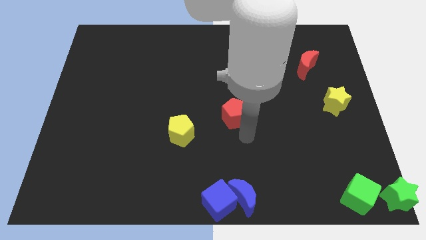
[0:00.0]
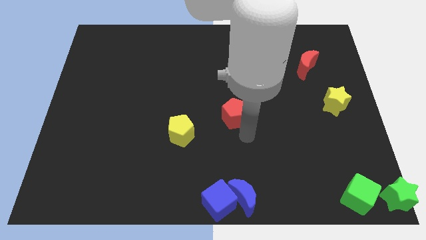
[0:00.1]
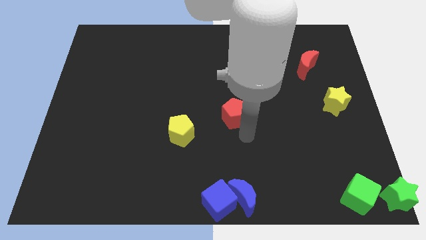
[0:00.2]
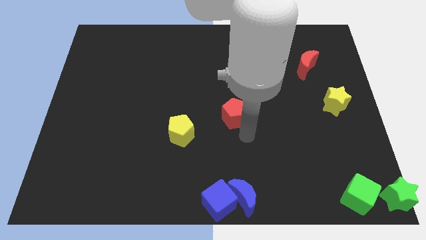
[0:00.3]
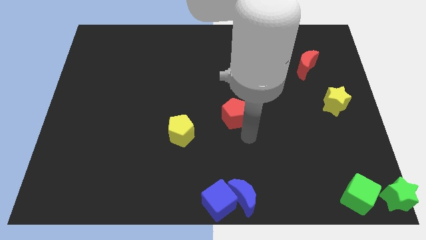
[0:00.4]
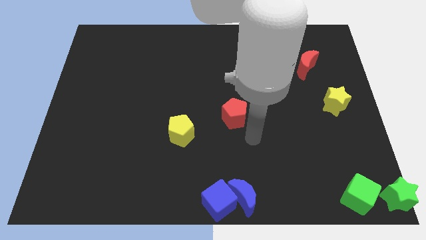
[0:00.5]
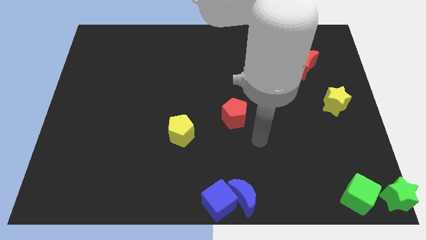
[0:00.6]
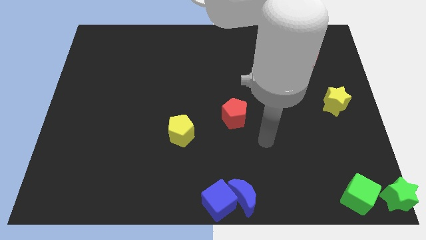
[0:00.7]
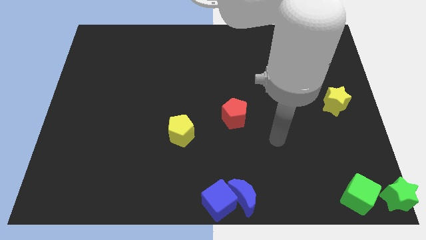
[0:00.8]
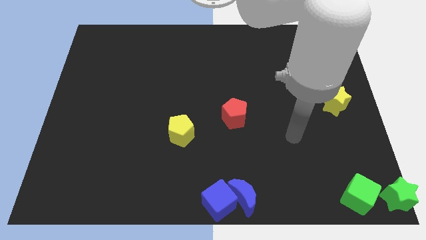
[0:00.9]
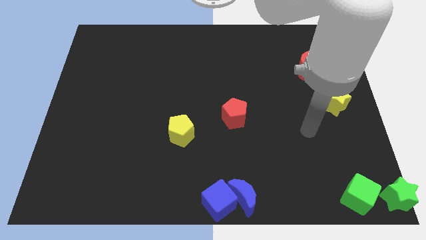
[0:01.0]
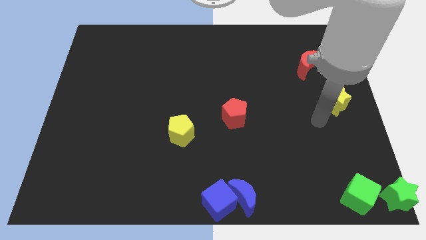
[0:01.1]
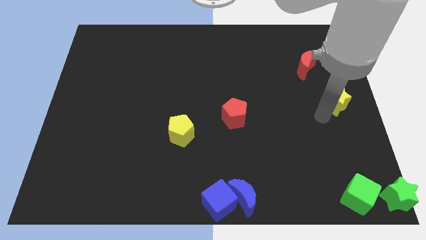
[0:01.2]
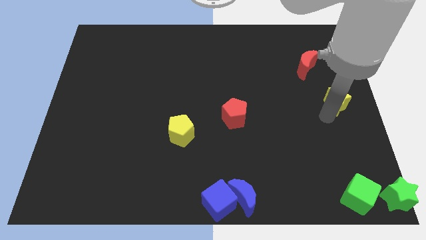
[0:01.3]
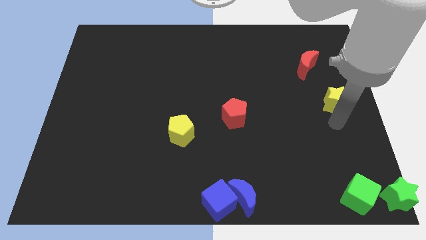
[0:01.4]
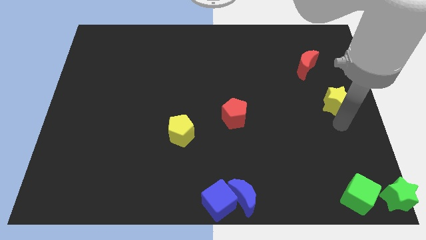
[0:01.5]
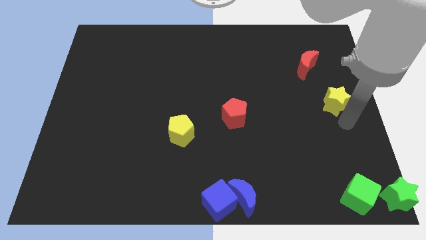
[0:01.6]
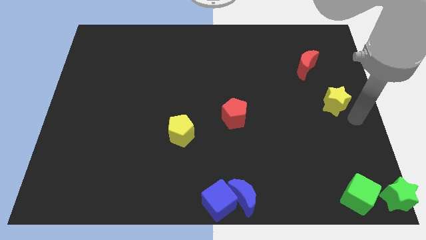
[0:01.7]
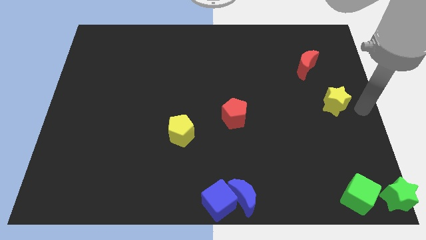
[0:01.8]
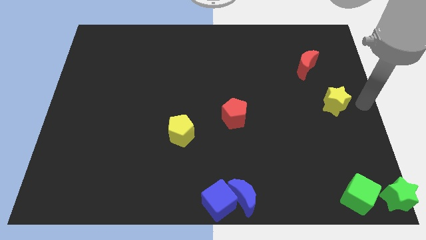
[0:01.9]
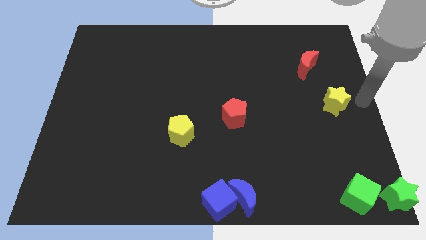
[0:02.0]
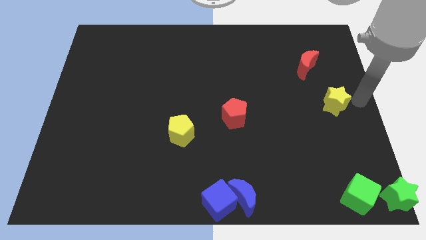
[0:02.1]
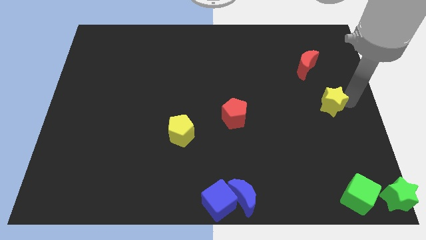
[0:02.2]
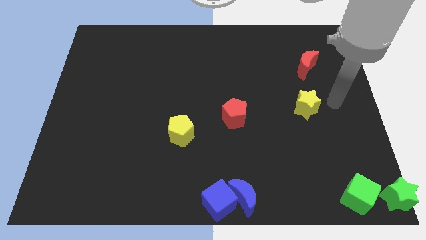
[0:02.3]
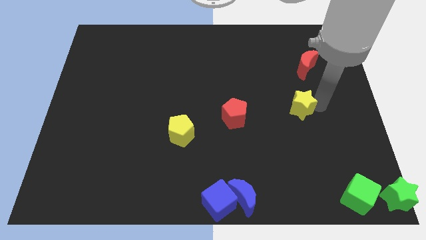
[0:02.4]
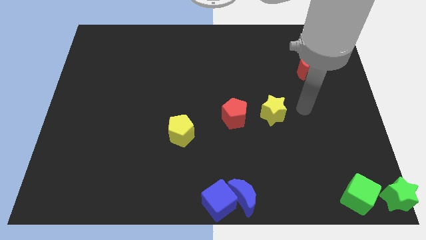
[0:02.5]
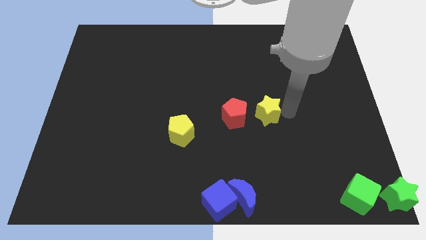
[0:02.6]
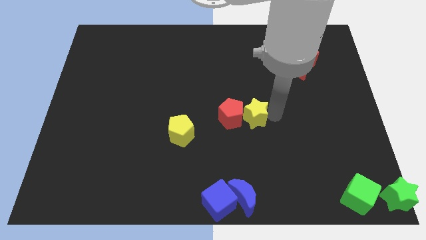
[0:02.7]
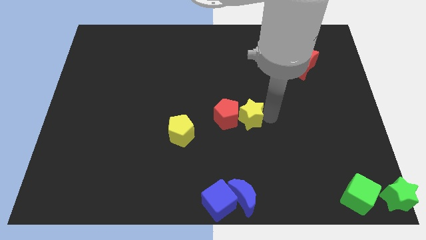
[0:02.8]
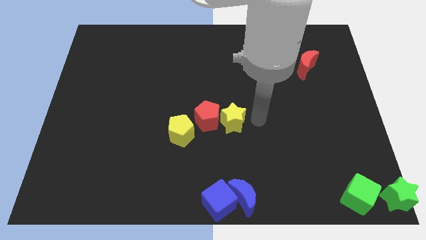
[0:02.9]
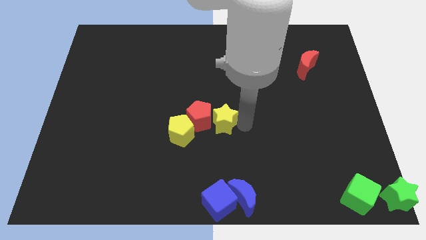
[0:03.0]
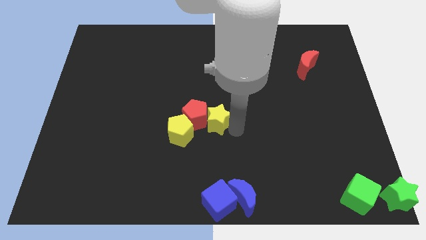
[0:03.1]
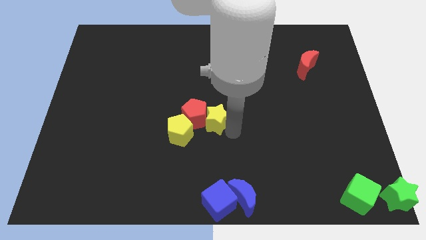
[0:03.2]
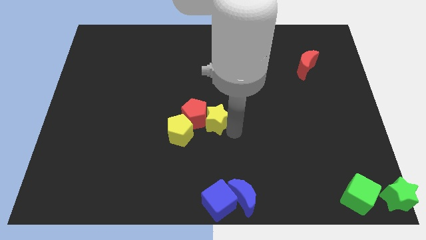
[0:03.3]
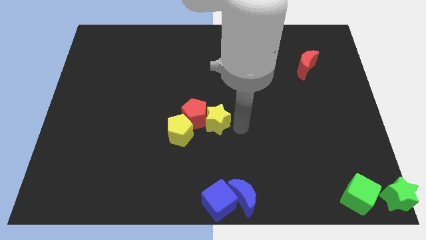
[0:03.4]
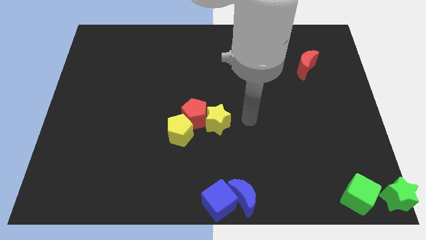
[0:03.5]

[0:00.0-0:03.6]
push the yellow star and the red pentagon into the yellow pentagon

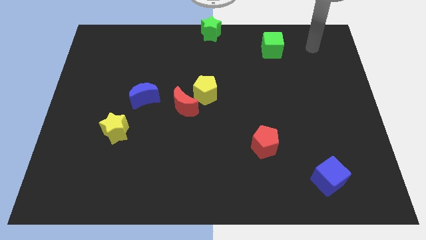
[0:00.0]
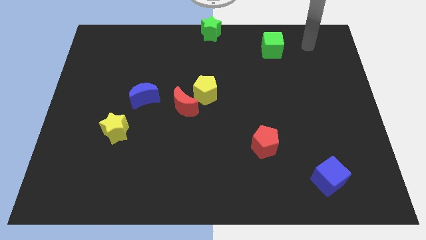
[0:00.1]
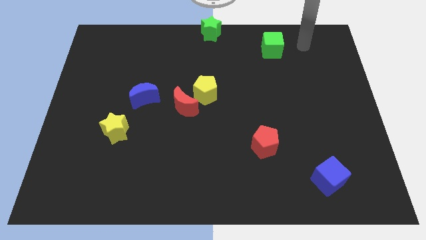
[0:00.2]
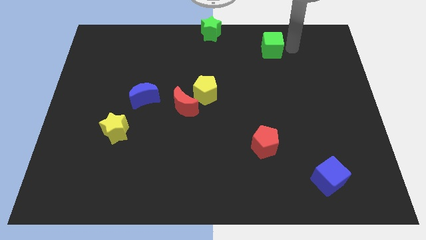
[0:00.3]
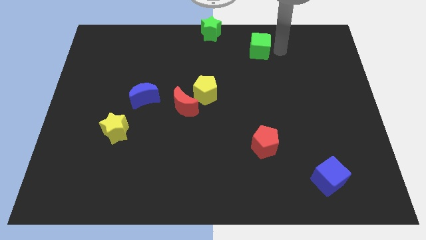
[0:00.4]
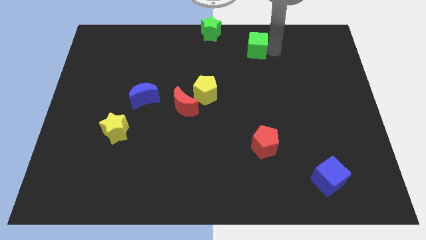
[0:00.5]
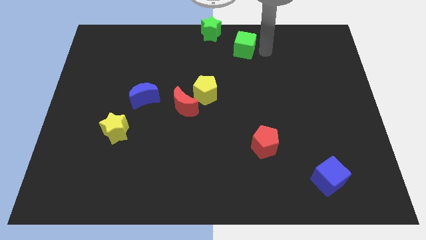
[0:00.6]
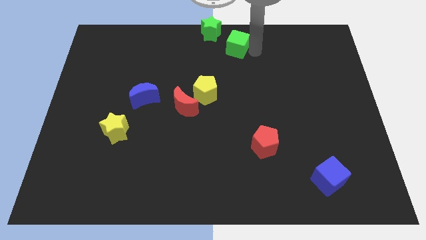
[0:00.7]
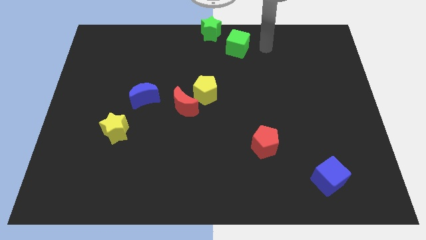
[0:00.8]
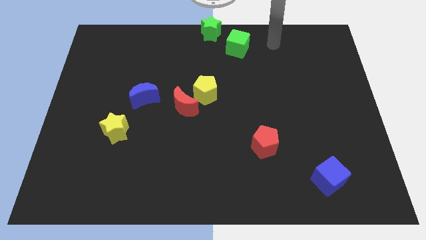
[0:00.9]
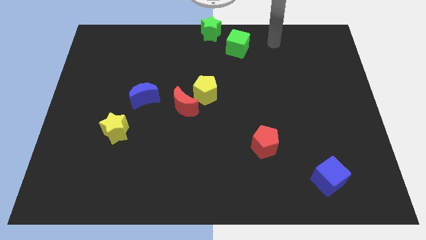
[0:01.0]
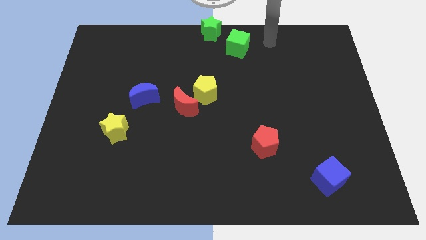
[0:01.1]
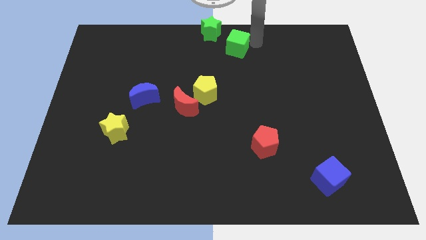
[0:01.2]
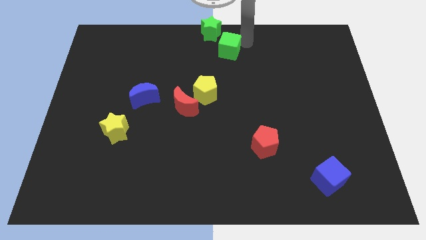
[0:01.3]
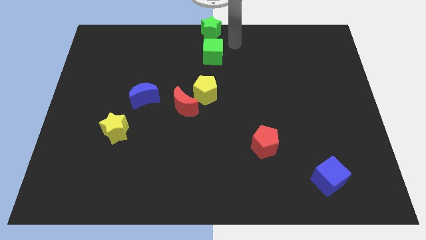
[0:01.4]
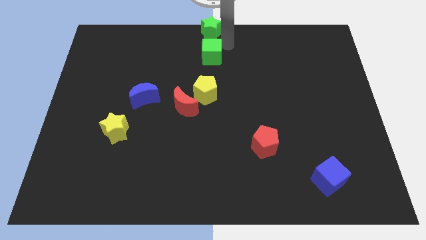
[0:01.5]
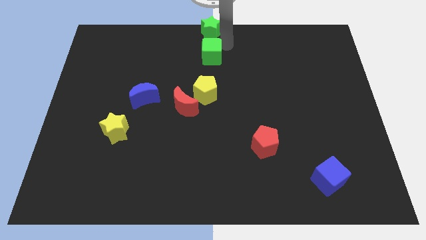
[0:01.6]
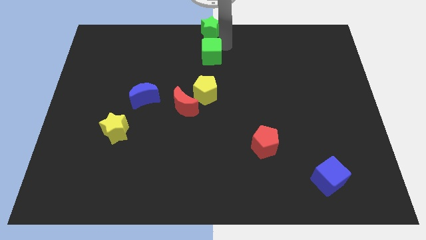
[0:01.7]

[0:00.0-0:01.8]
put the green cube below the green star

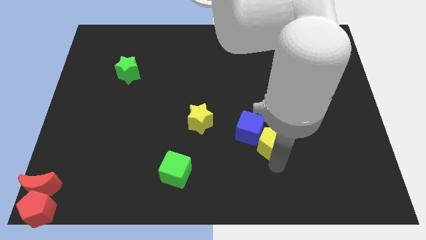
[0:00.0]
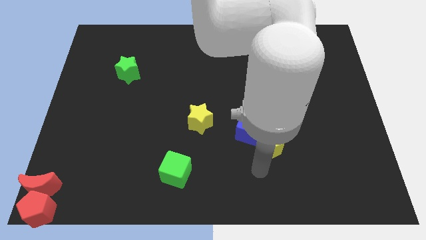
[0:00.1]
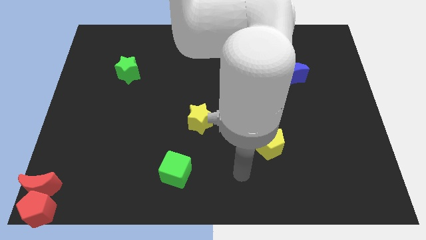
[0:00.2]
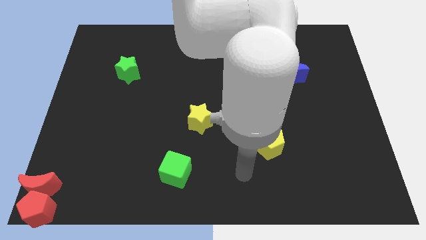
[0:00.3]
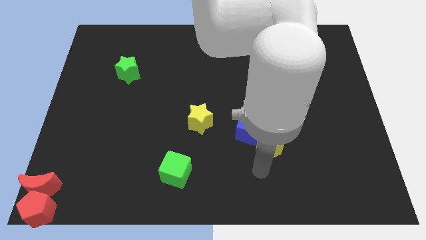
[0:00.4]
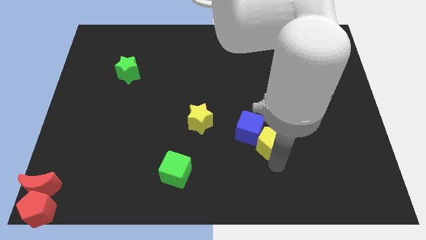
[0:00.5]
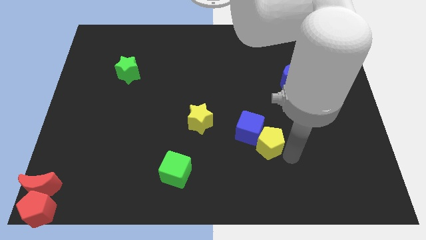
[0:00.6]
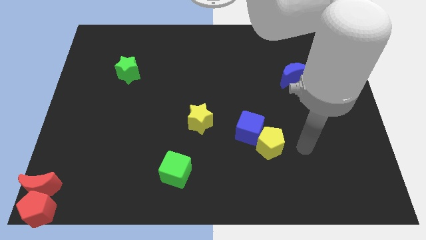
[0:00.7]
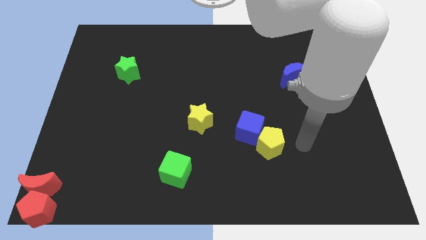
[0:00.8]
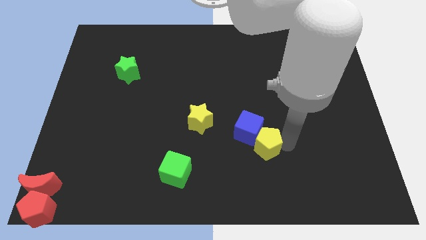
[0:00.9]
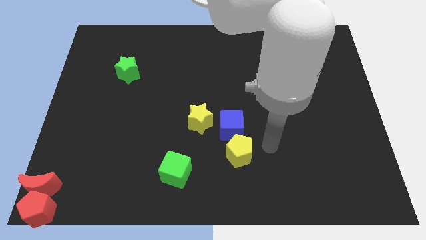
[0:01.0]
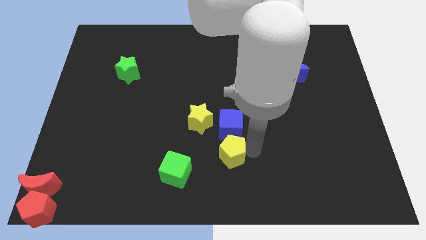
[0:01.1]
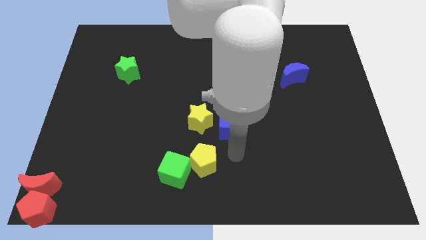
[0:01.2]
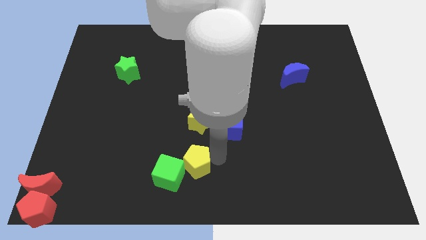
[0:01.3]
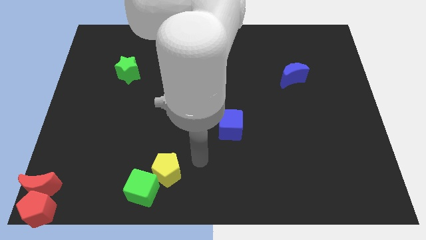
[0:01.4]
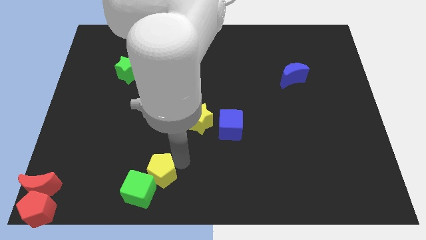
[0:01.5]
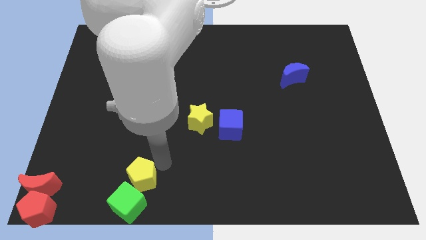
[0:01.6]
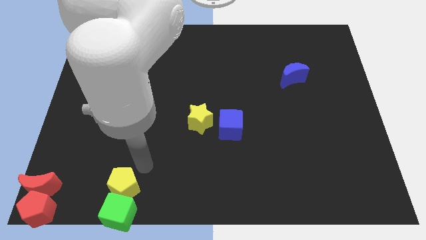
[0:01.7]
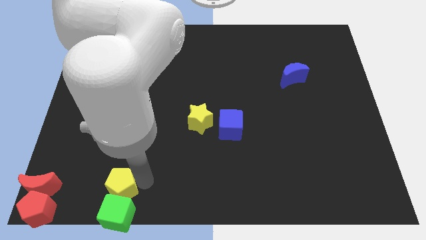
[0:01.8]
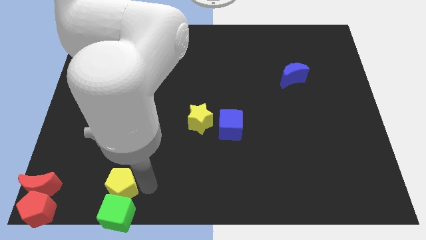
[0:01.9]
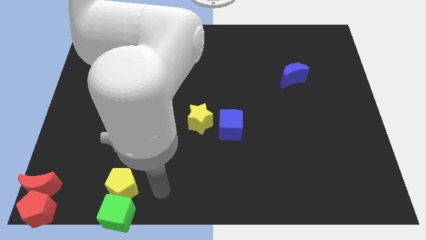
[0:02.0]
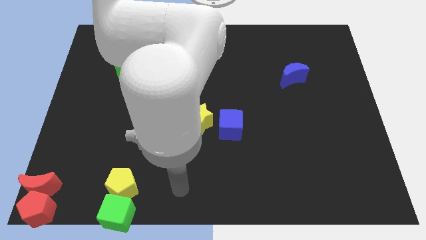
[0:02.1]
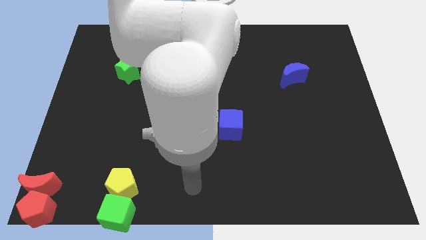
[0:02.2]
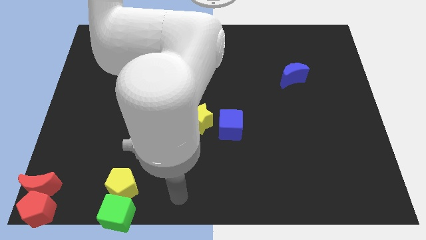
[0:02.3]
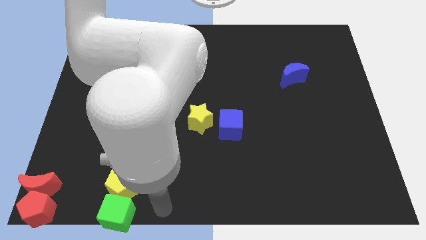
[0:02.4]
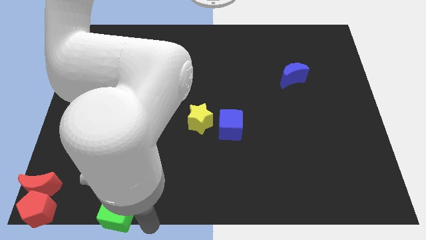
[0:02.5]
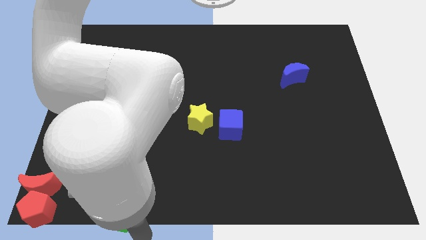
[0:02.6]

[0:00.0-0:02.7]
drag the yellow pentagon downwards along with green cube

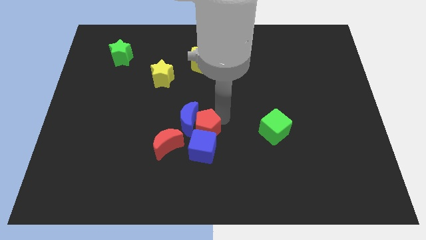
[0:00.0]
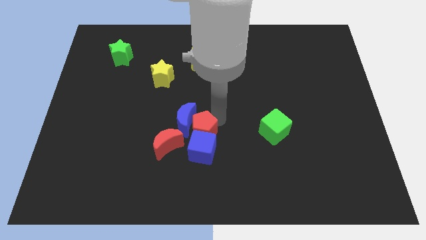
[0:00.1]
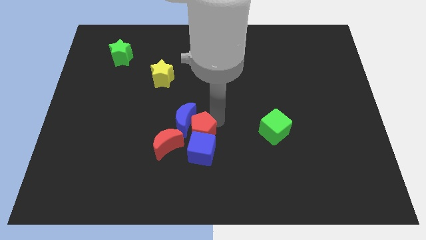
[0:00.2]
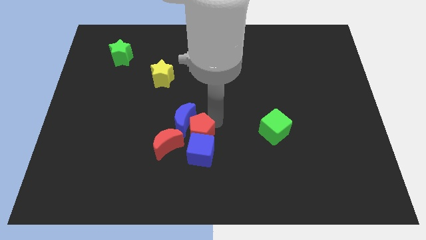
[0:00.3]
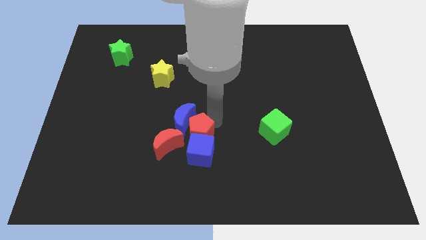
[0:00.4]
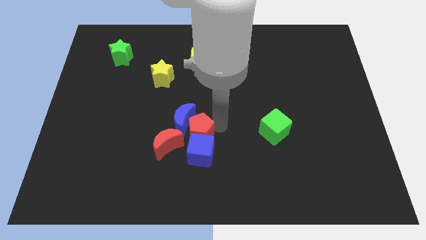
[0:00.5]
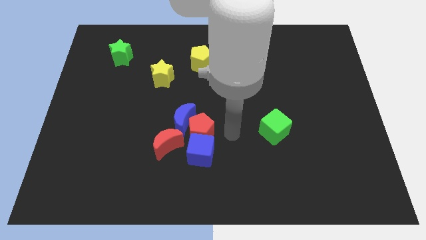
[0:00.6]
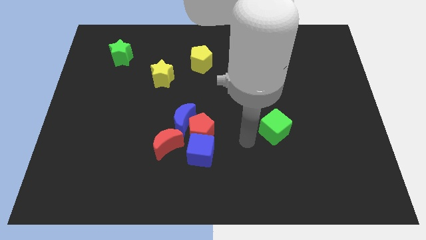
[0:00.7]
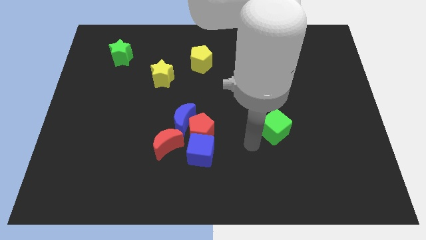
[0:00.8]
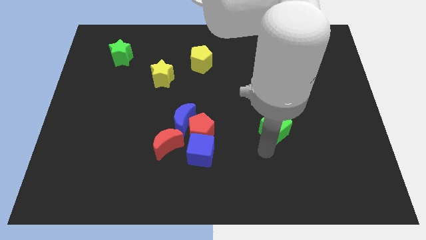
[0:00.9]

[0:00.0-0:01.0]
push the red pentagon into the blue cube and move away from it

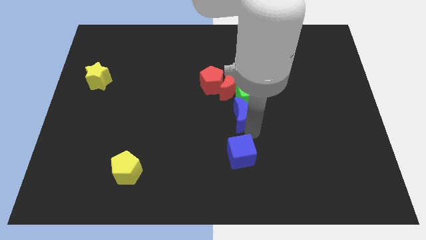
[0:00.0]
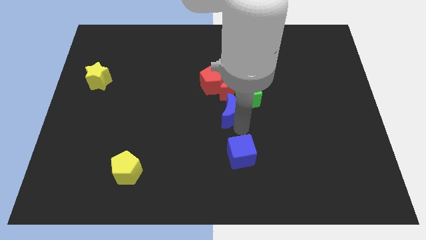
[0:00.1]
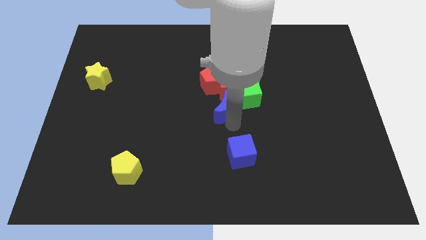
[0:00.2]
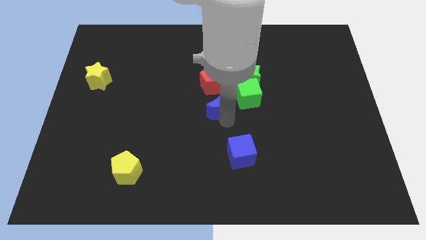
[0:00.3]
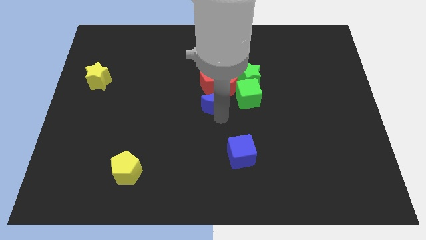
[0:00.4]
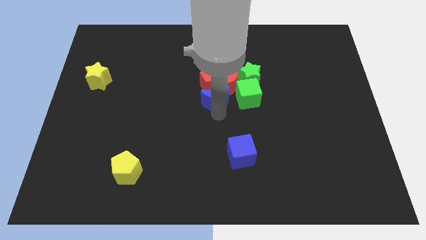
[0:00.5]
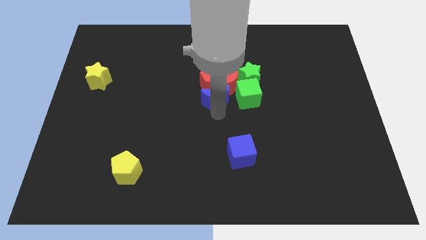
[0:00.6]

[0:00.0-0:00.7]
move the blue moon to the bottom of the red pentagon
